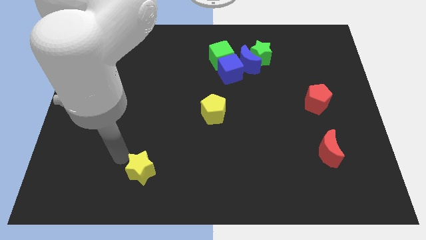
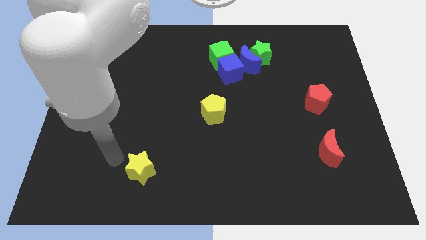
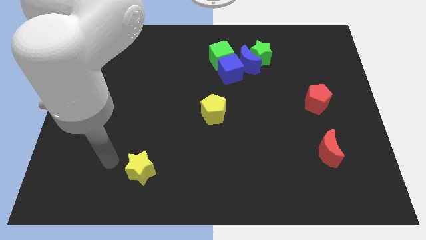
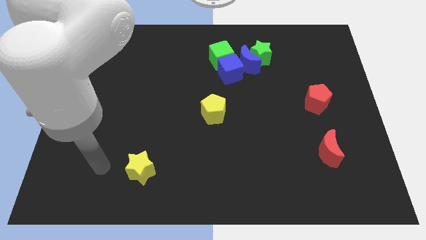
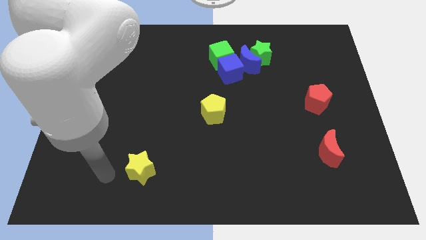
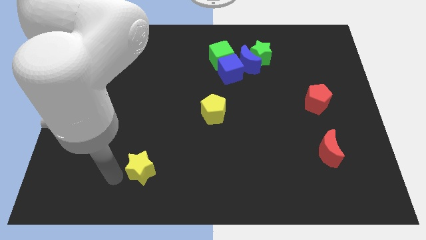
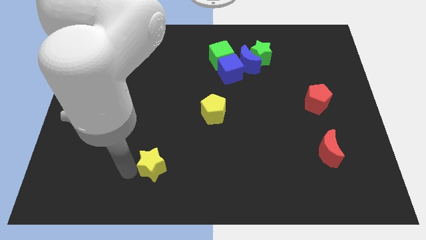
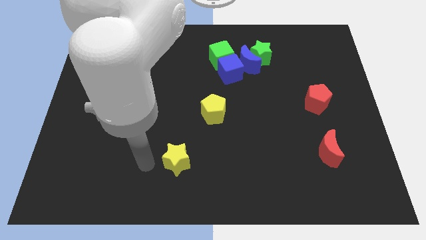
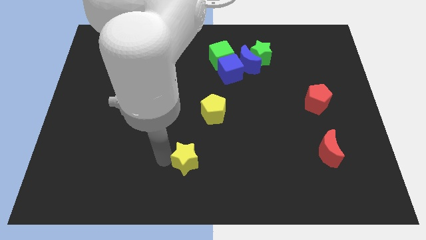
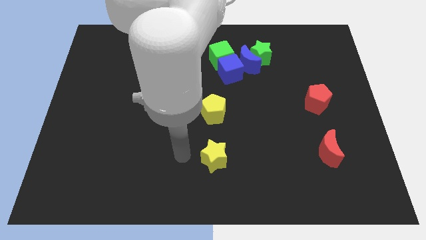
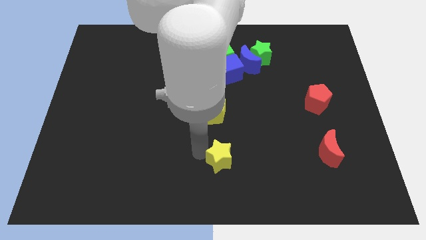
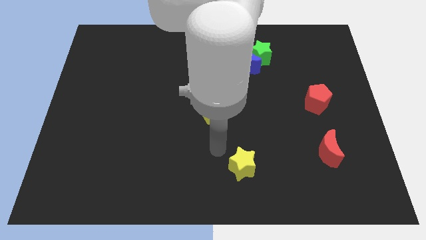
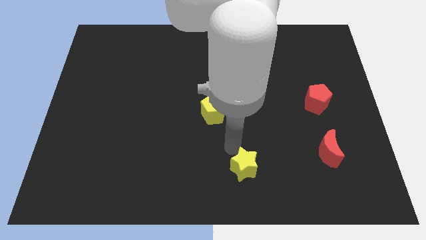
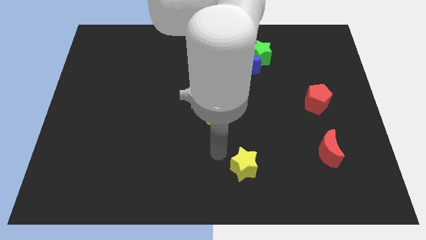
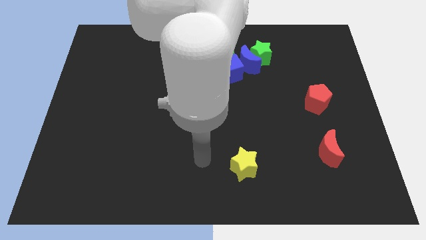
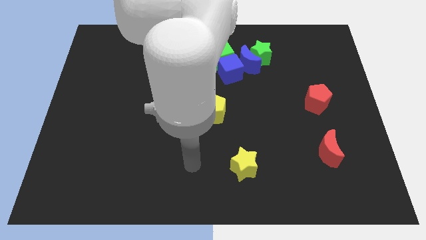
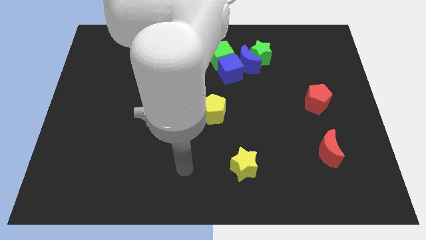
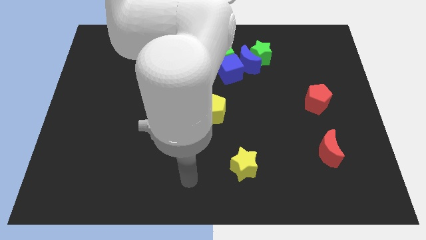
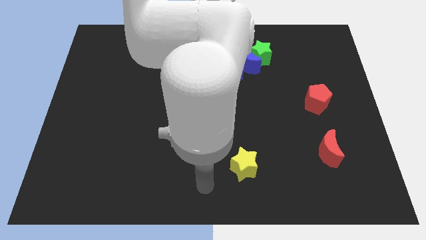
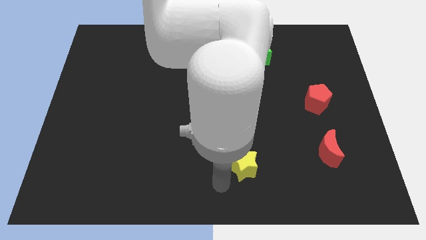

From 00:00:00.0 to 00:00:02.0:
place the yellow star to the left of the red moon

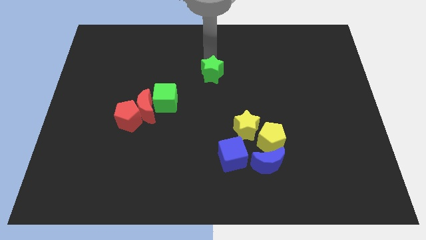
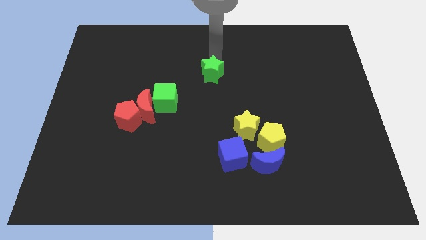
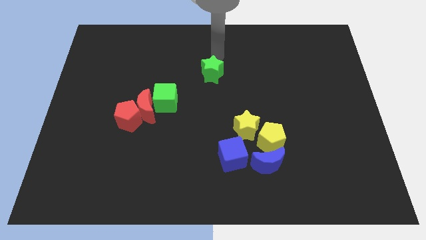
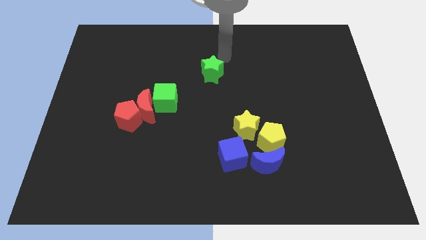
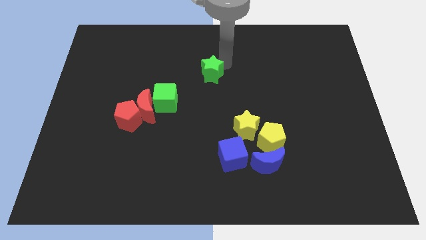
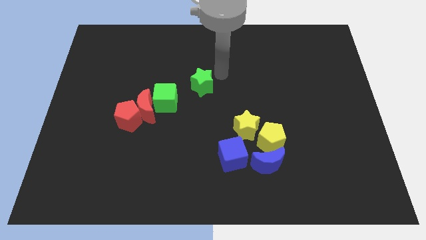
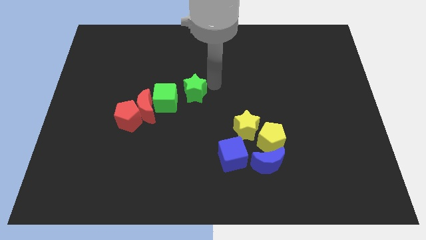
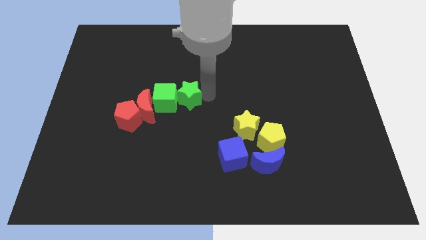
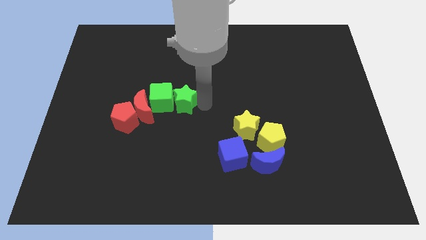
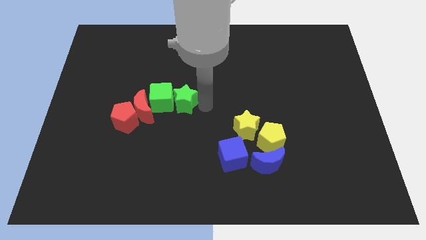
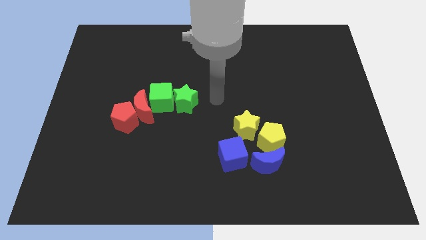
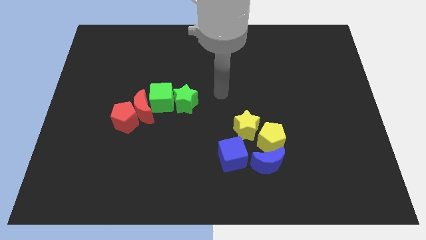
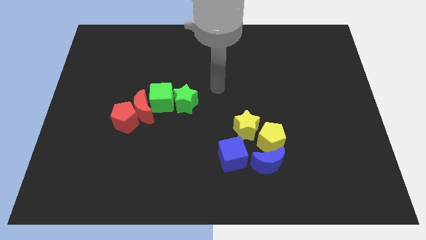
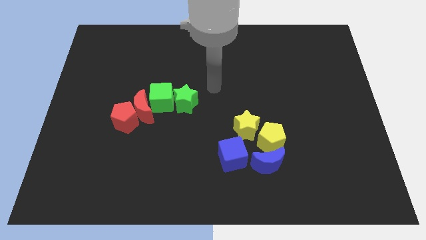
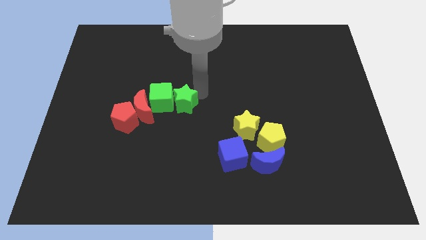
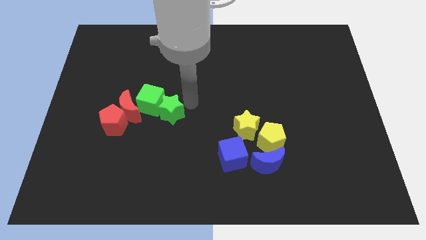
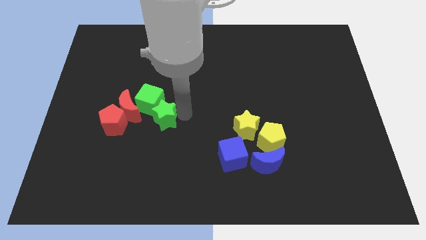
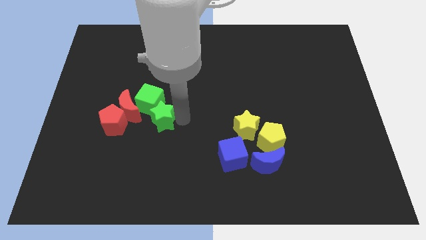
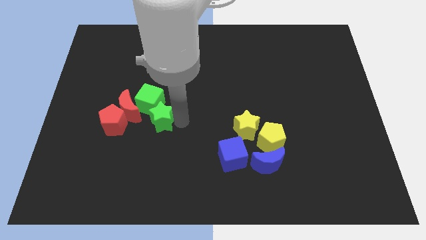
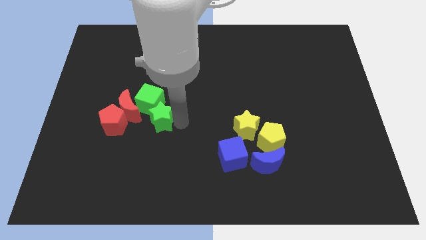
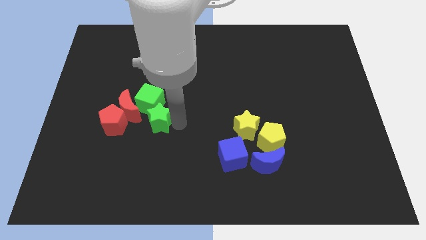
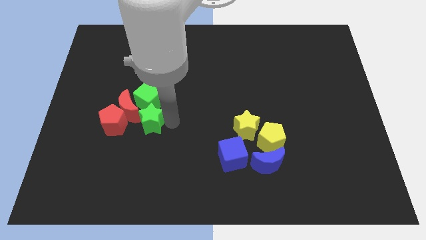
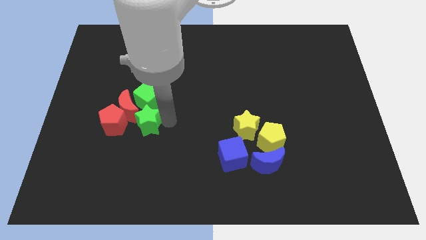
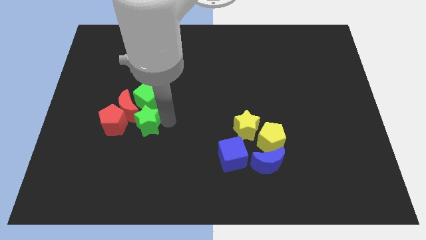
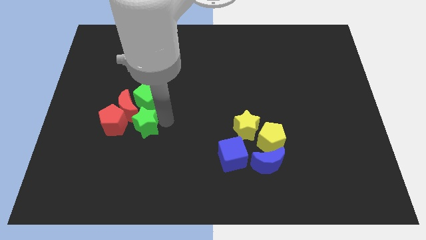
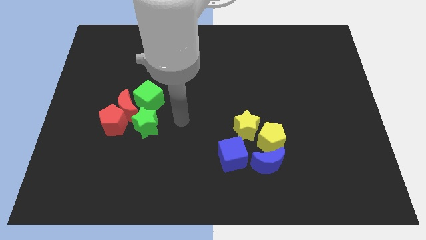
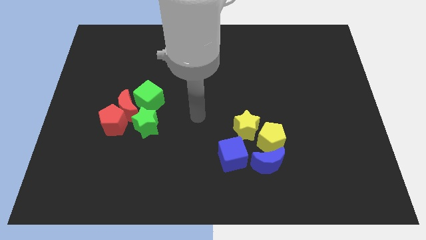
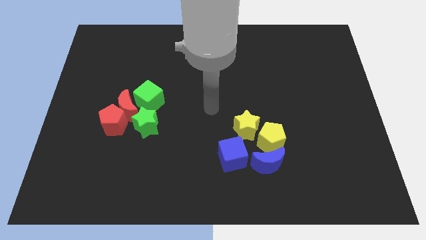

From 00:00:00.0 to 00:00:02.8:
move the green star to the bottom of the green cube

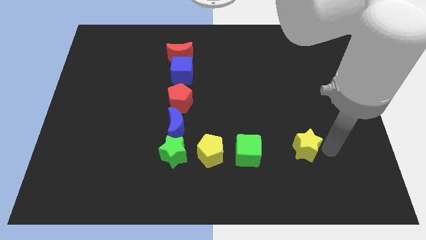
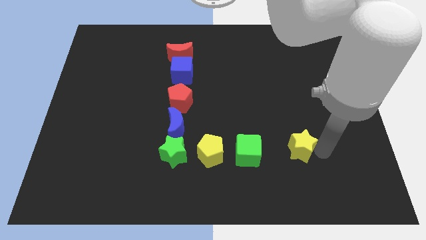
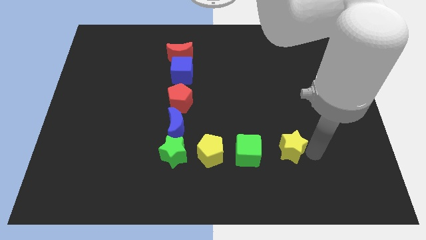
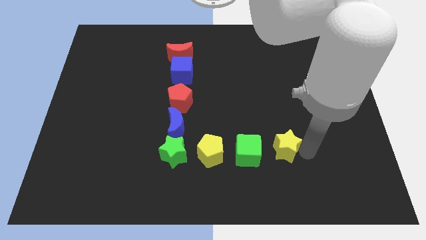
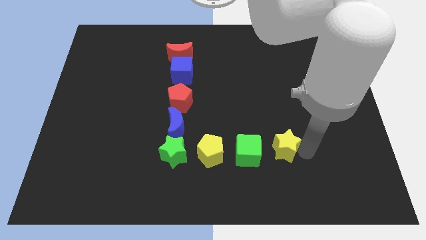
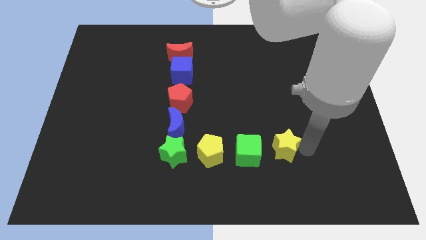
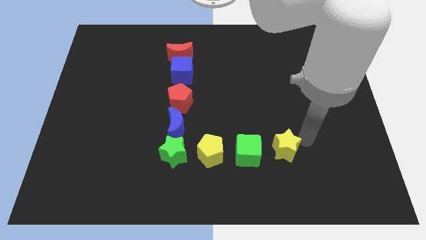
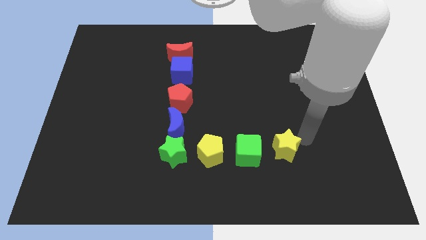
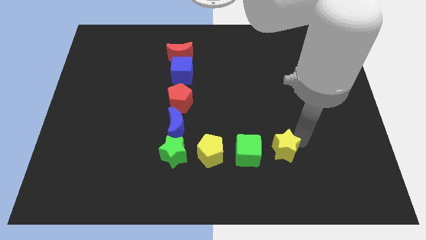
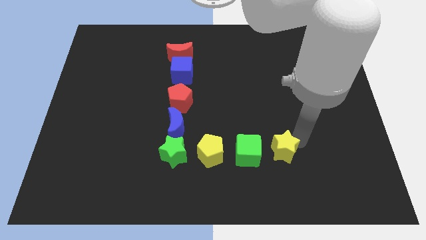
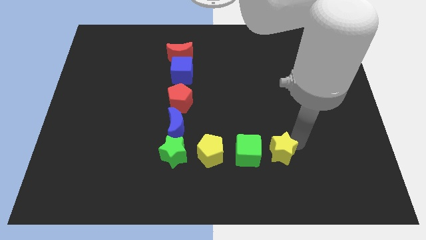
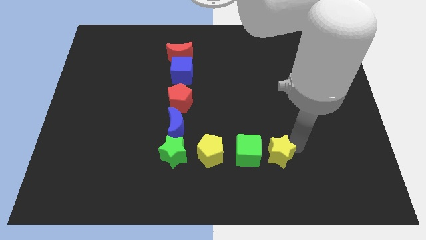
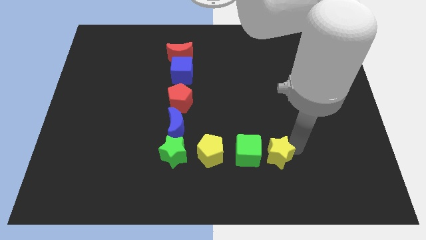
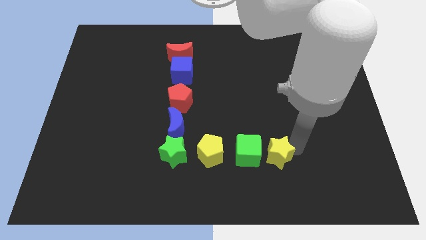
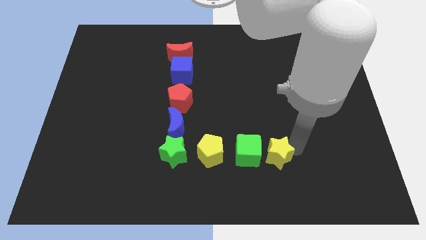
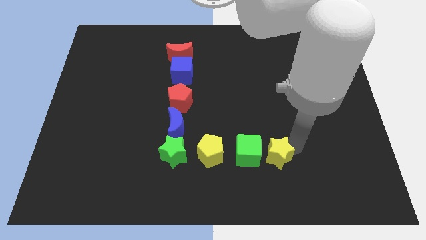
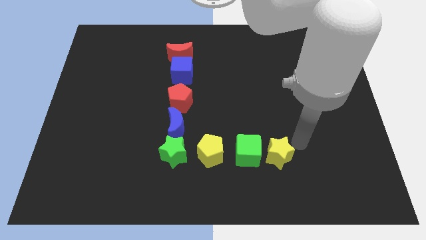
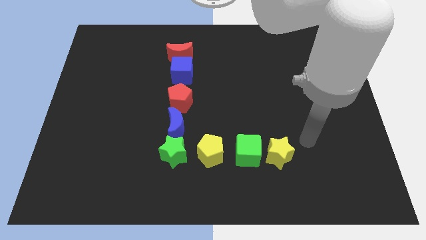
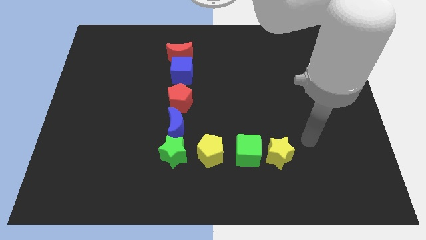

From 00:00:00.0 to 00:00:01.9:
move the yellow star to the right side of the green cube

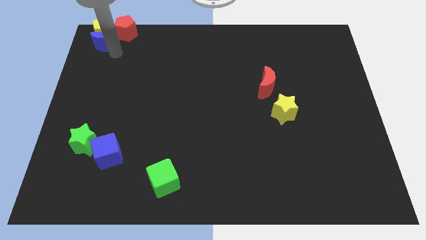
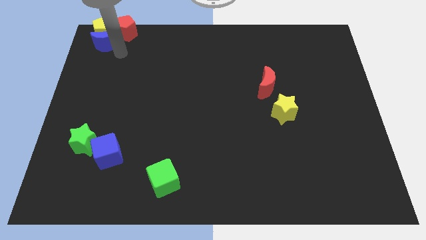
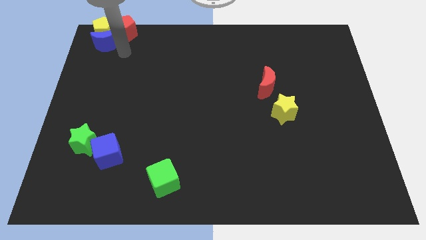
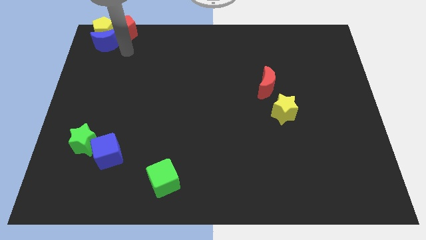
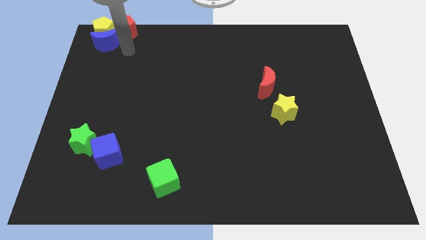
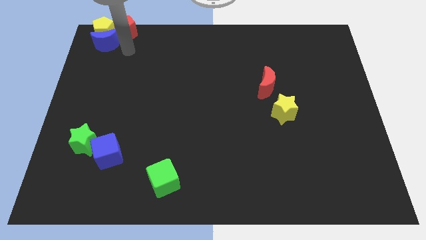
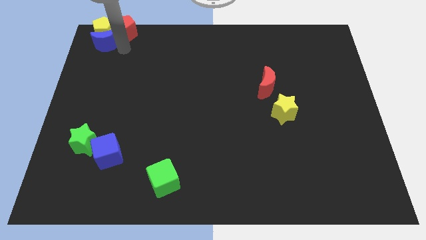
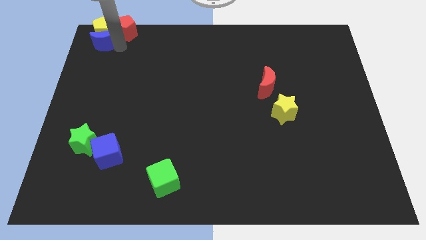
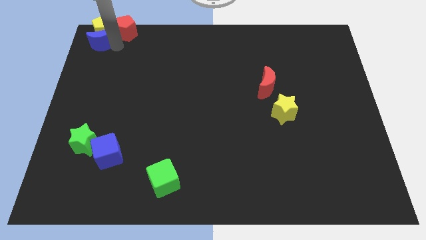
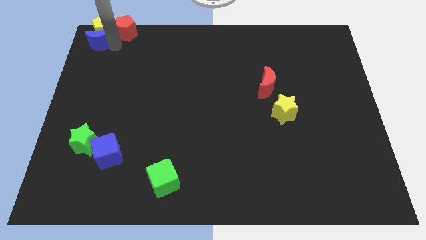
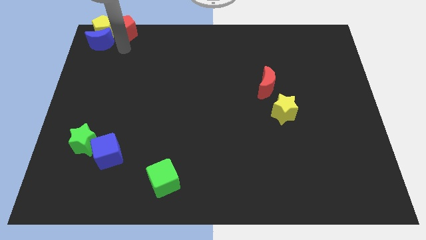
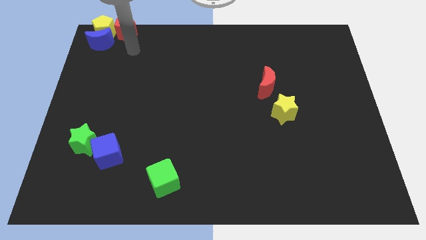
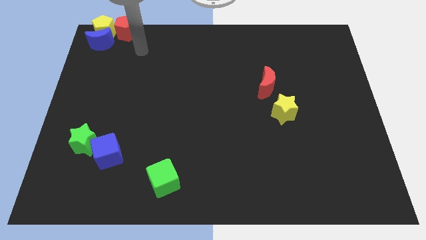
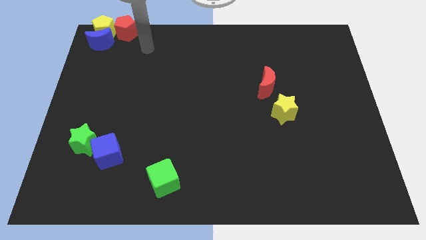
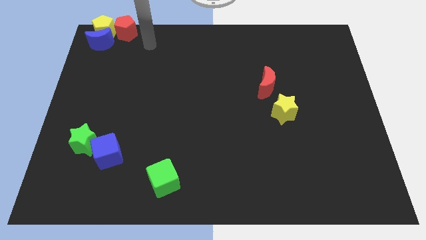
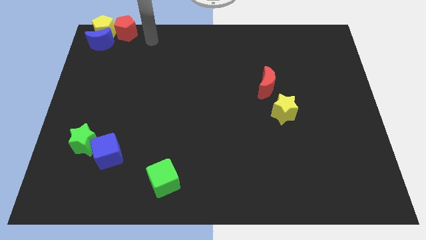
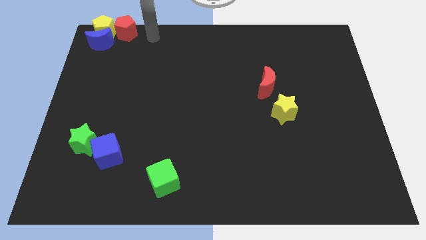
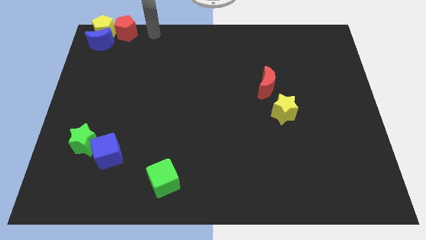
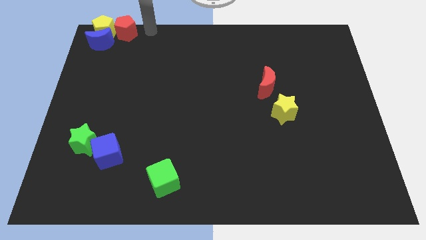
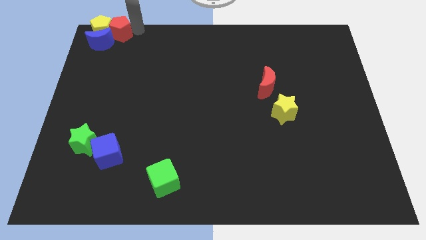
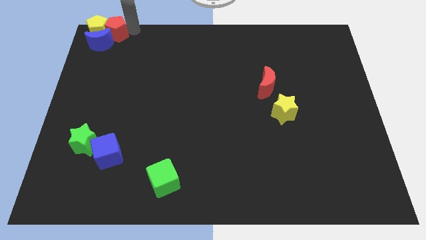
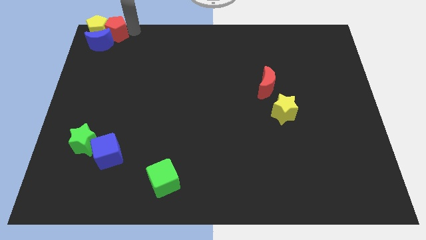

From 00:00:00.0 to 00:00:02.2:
slightly push the red pentagon into the yellow pentagon

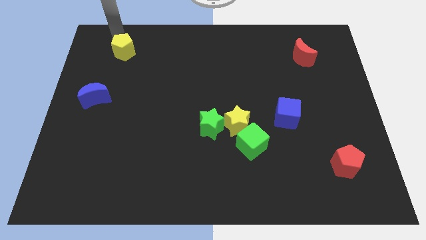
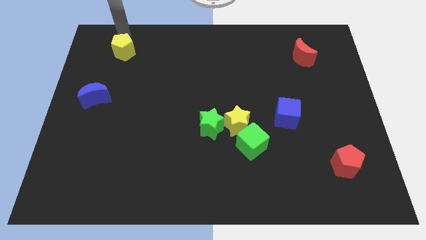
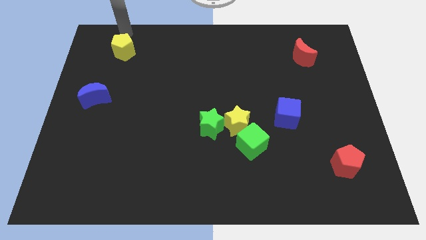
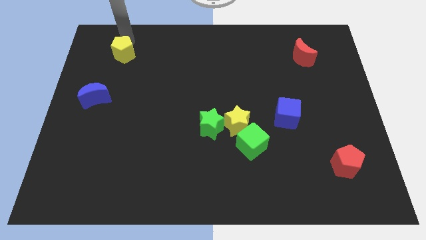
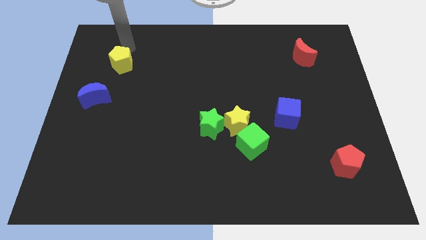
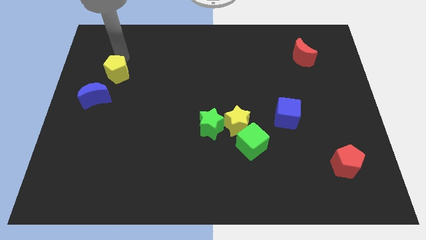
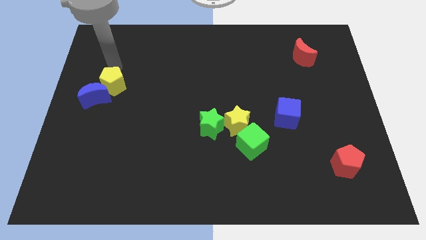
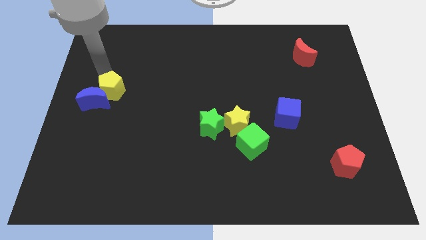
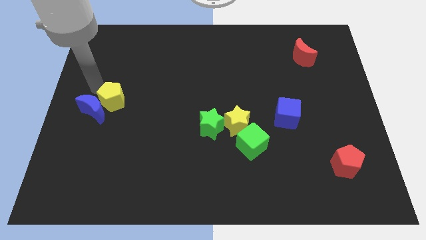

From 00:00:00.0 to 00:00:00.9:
push the yellow pentagon into blue moon
